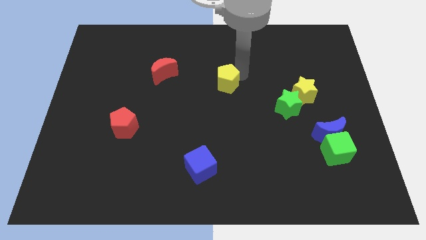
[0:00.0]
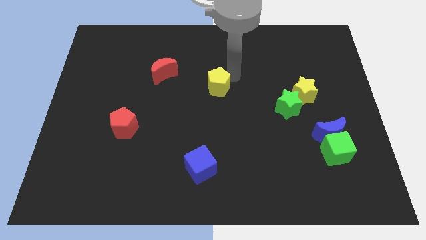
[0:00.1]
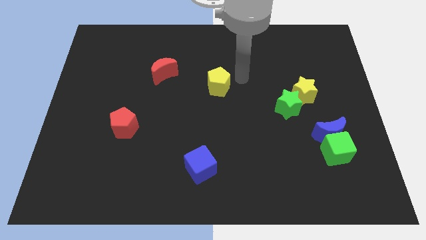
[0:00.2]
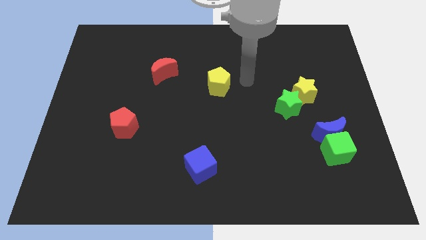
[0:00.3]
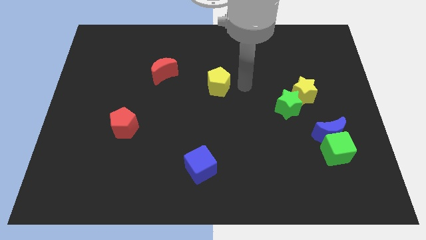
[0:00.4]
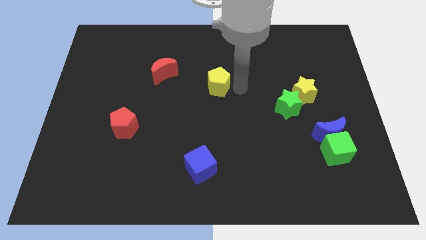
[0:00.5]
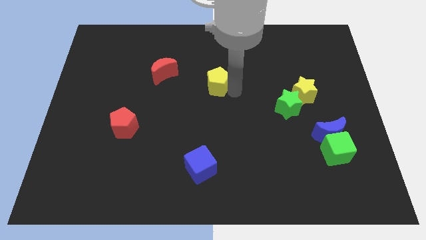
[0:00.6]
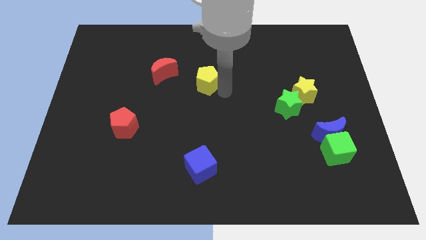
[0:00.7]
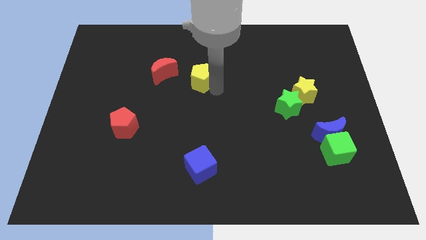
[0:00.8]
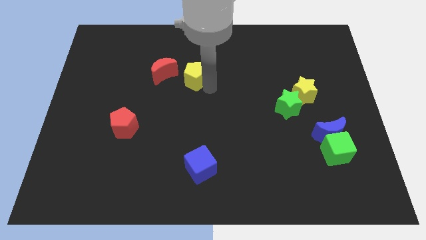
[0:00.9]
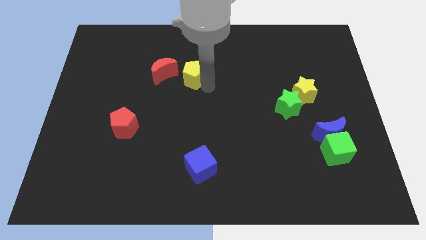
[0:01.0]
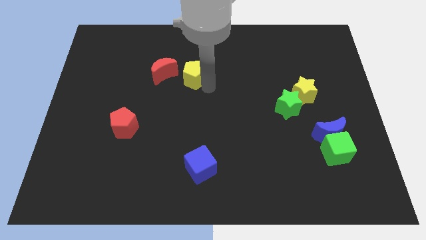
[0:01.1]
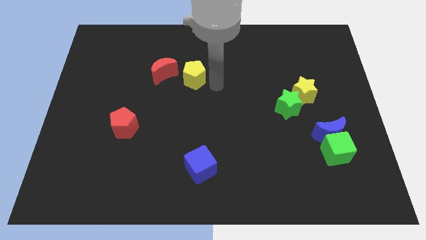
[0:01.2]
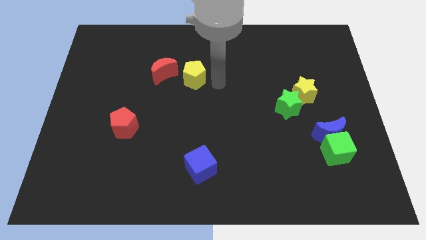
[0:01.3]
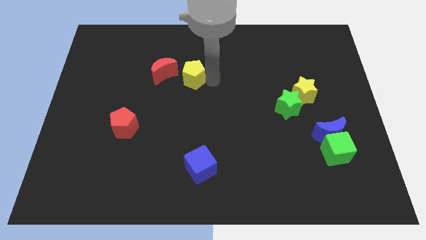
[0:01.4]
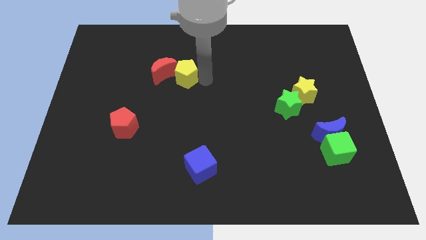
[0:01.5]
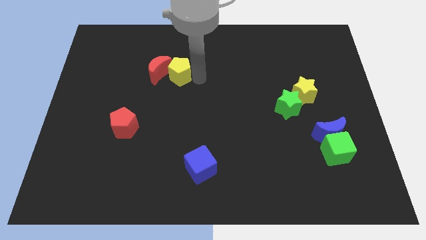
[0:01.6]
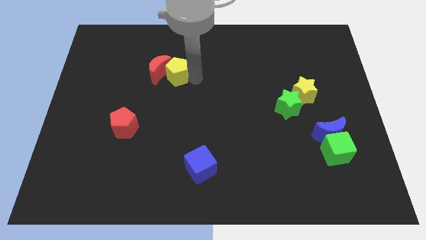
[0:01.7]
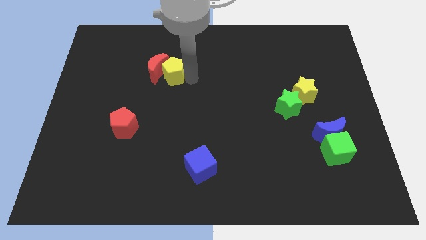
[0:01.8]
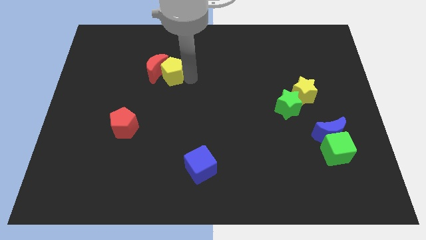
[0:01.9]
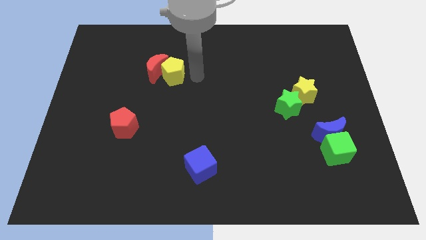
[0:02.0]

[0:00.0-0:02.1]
push the yellow pentagon into red moon

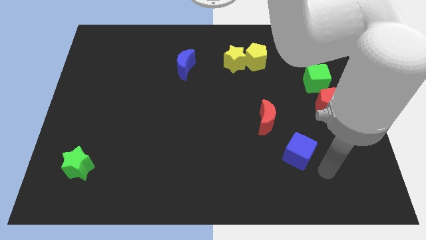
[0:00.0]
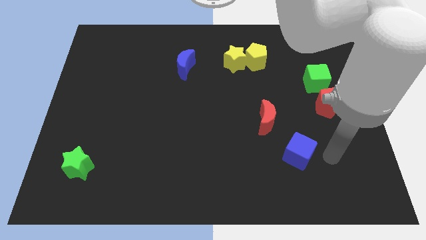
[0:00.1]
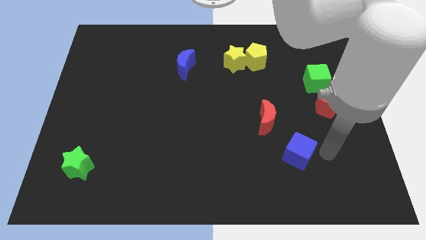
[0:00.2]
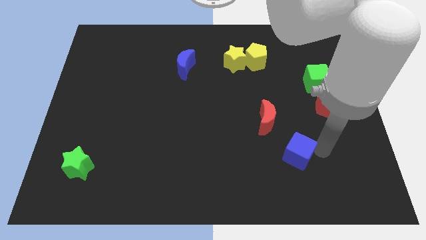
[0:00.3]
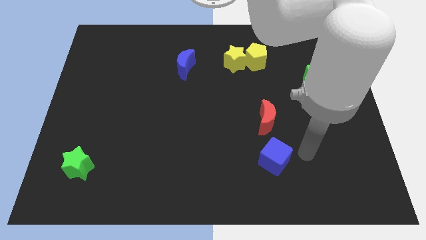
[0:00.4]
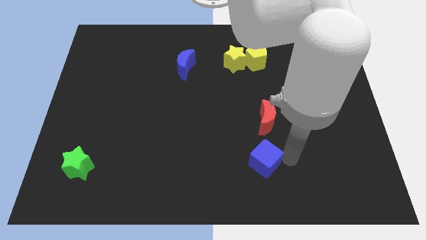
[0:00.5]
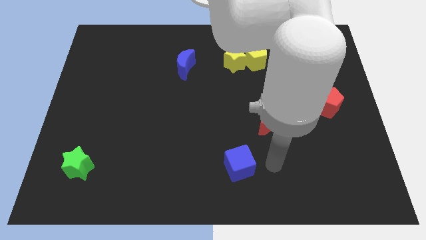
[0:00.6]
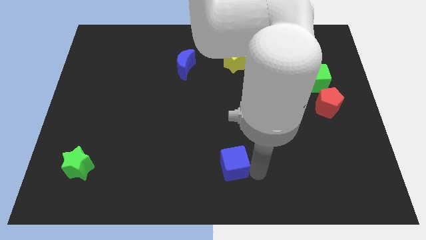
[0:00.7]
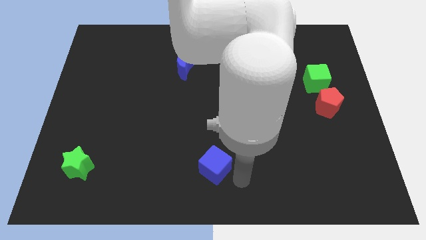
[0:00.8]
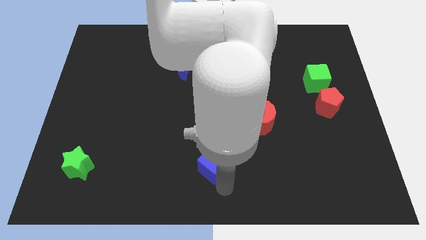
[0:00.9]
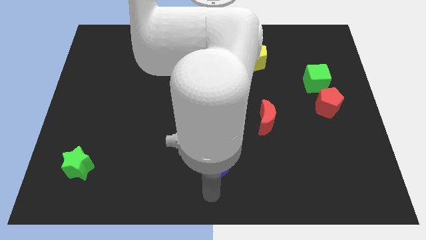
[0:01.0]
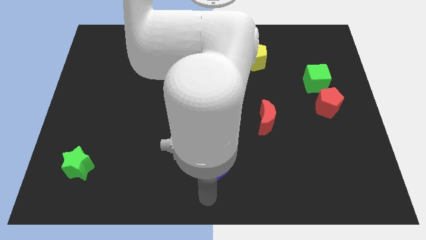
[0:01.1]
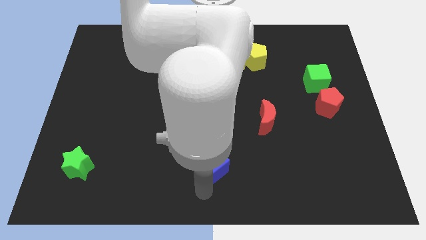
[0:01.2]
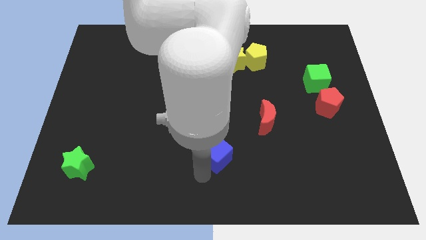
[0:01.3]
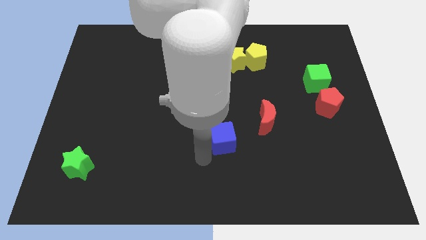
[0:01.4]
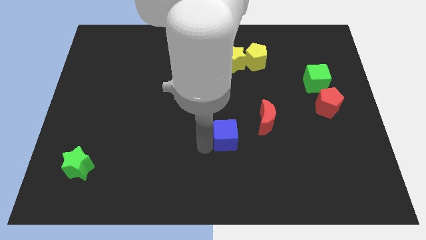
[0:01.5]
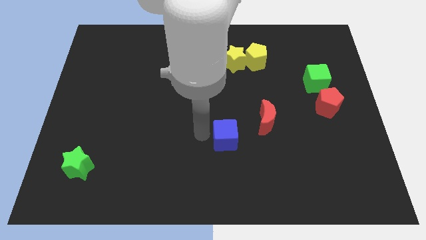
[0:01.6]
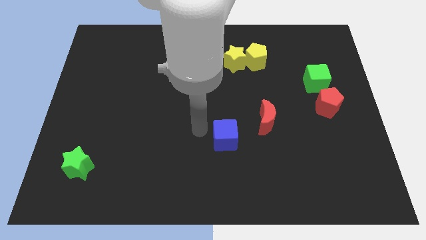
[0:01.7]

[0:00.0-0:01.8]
push the blue cube to the bottom left of the red crescent

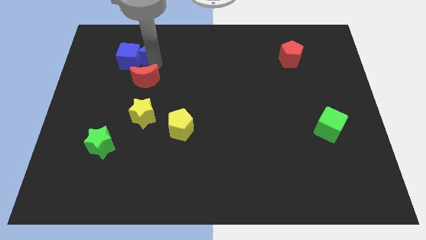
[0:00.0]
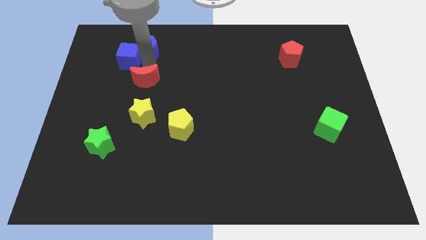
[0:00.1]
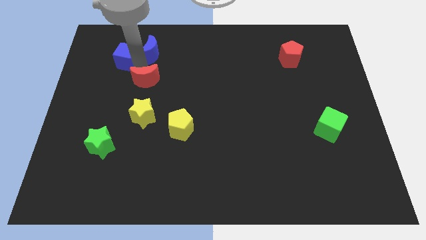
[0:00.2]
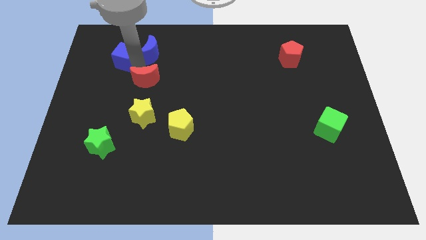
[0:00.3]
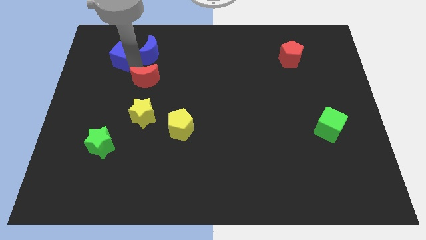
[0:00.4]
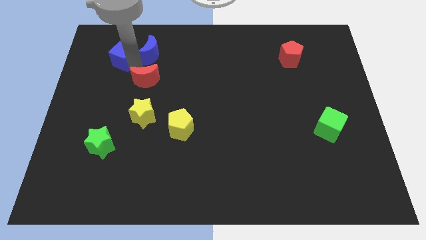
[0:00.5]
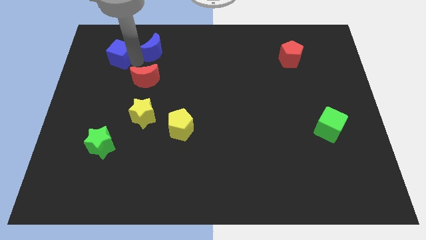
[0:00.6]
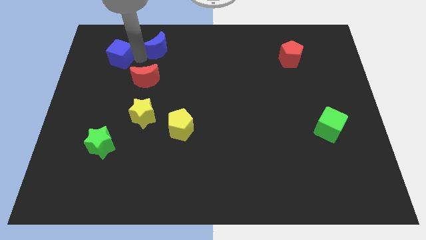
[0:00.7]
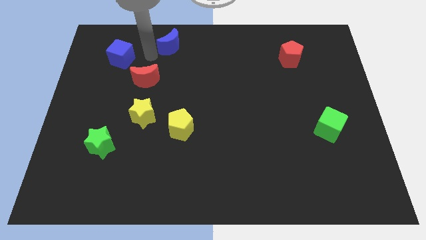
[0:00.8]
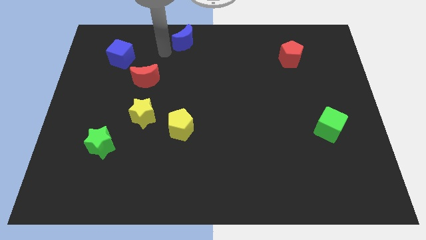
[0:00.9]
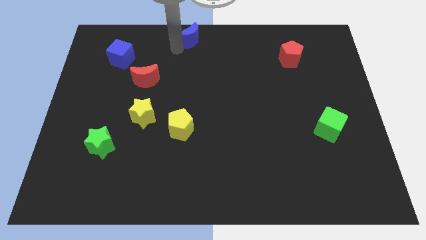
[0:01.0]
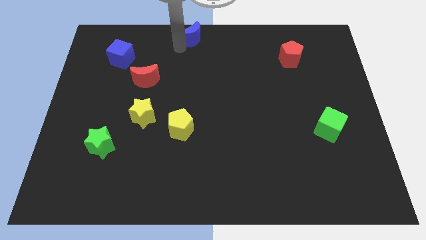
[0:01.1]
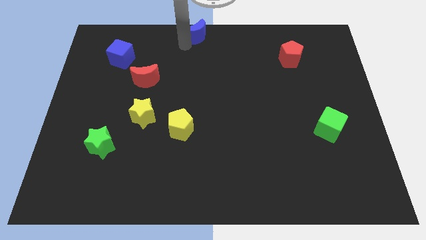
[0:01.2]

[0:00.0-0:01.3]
separate blue cube and blue moon

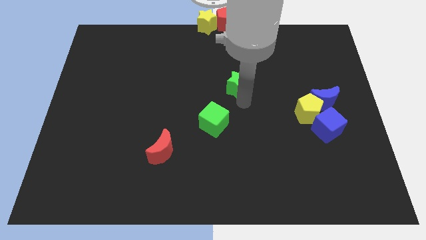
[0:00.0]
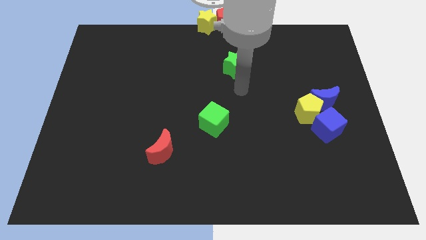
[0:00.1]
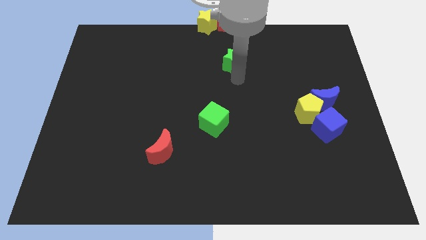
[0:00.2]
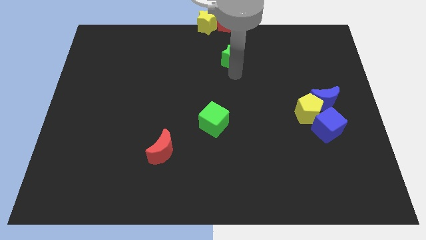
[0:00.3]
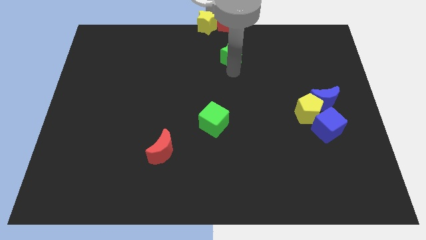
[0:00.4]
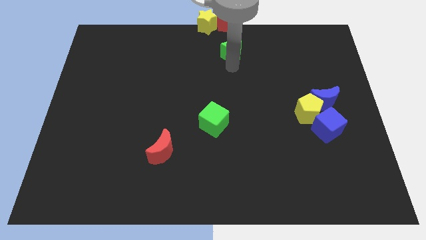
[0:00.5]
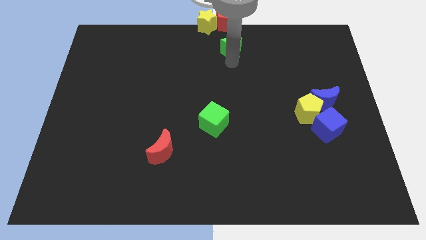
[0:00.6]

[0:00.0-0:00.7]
push the green star parallel to the red pentagon

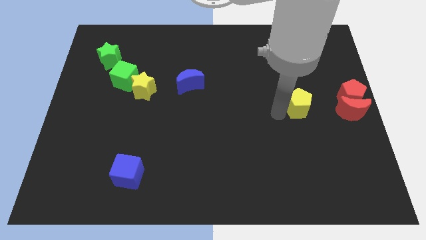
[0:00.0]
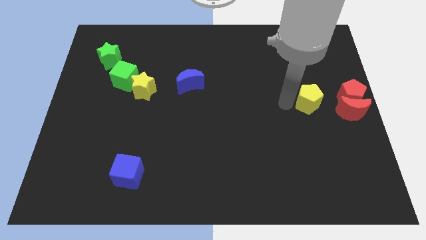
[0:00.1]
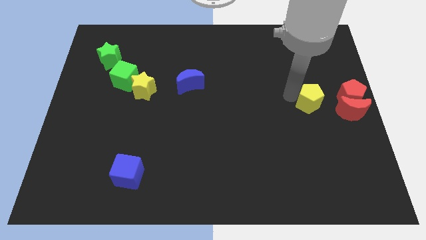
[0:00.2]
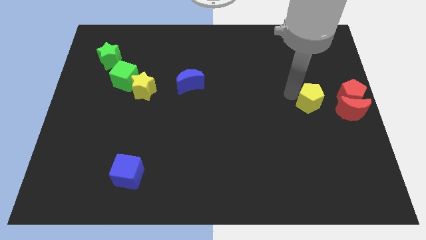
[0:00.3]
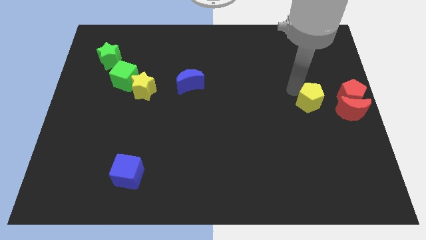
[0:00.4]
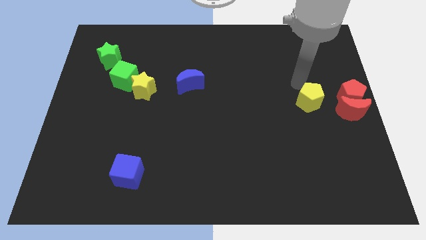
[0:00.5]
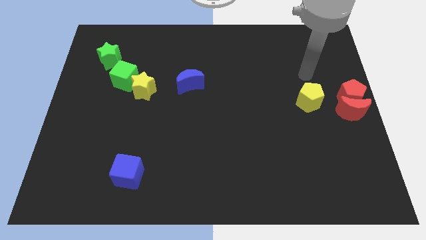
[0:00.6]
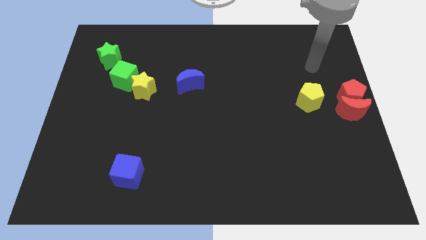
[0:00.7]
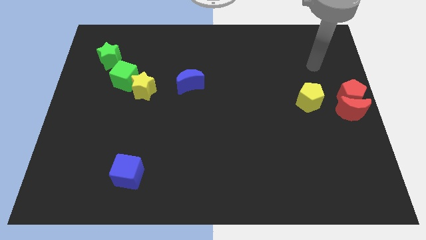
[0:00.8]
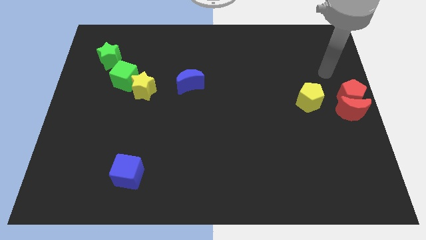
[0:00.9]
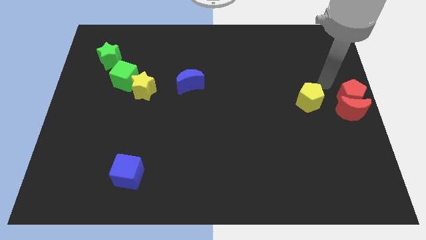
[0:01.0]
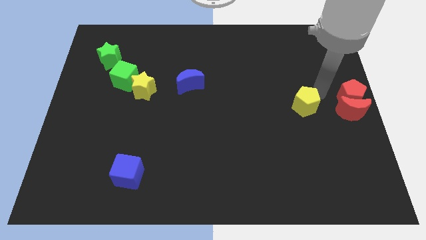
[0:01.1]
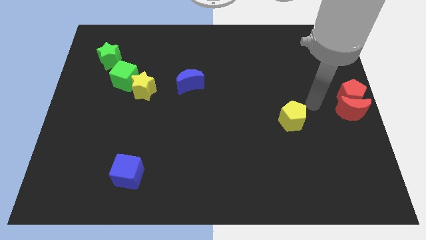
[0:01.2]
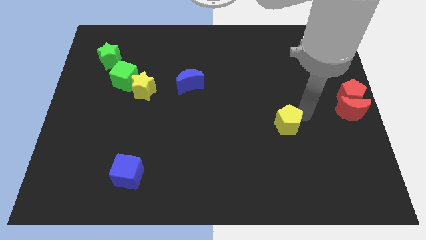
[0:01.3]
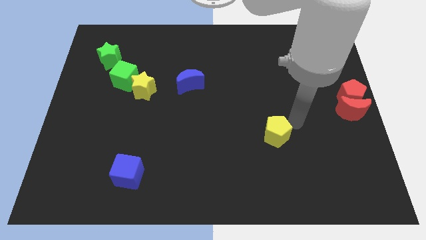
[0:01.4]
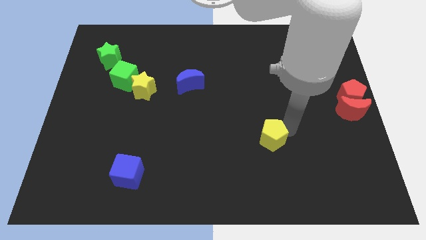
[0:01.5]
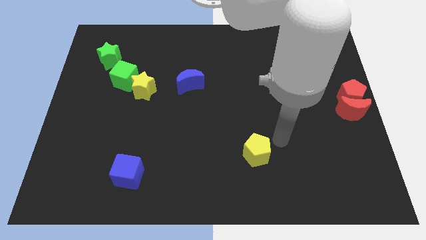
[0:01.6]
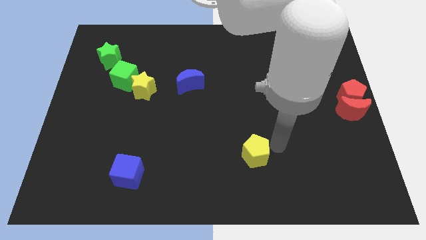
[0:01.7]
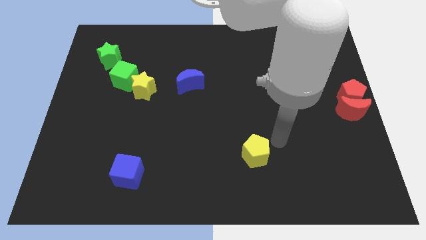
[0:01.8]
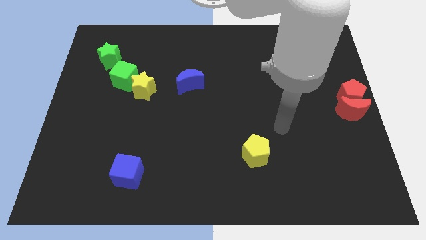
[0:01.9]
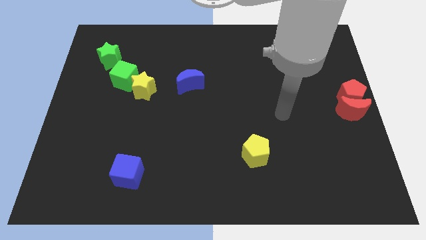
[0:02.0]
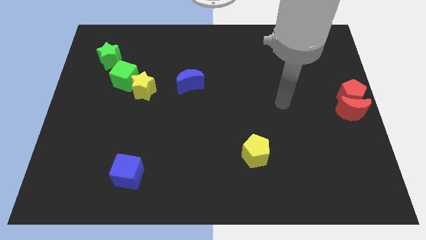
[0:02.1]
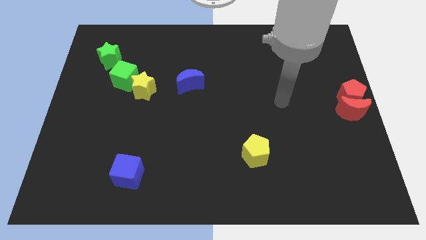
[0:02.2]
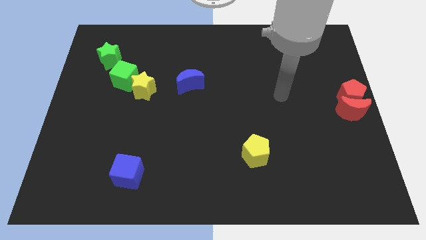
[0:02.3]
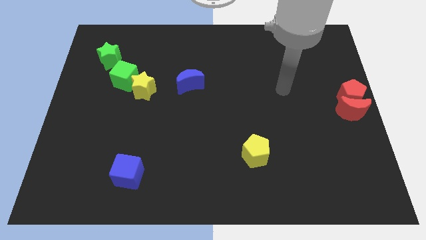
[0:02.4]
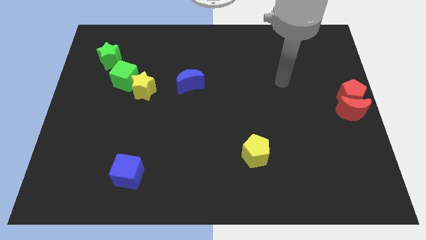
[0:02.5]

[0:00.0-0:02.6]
push the yellow pentagon towards the bottom side of the board

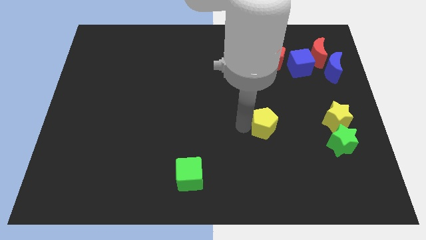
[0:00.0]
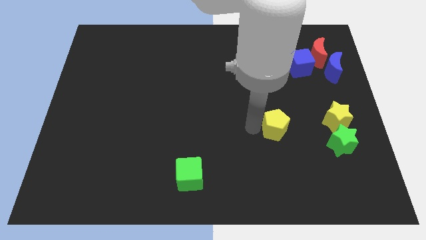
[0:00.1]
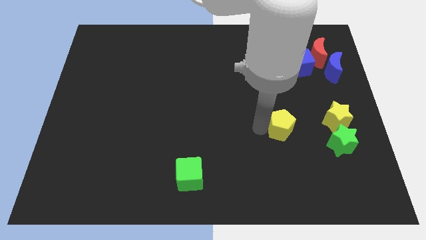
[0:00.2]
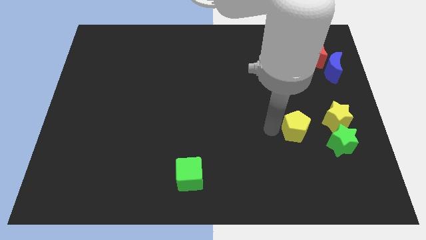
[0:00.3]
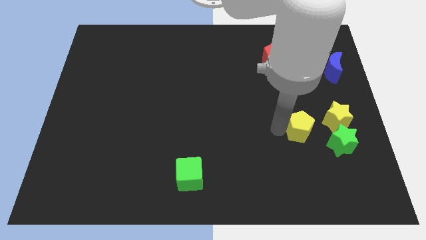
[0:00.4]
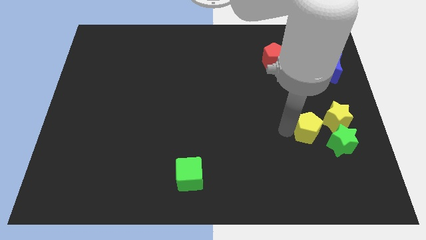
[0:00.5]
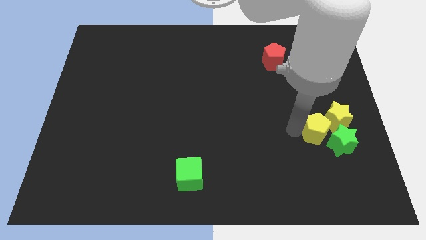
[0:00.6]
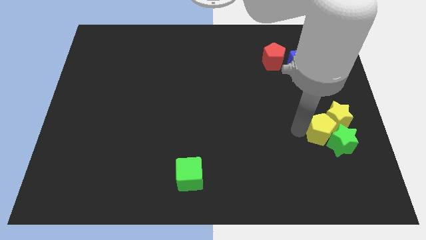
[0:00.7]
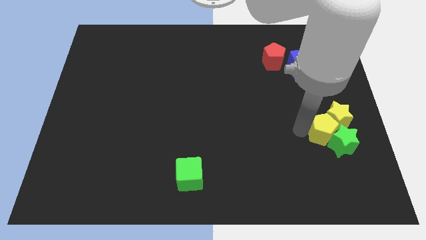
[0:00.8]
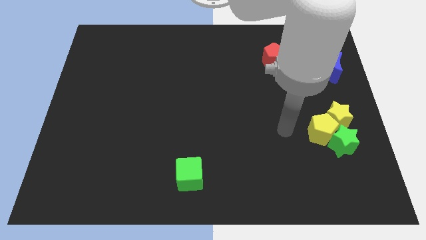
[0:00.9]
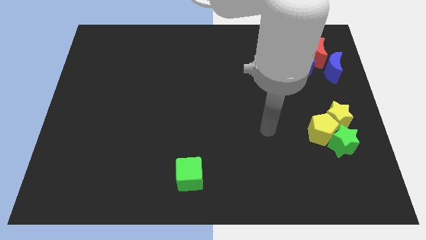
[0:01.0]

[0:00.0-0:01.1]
place the yellow pentagon into the group of blocks
